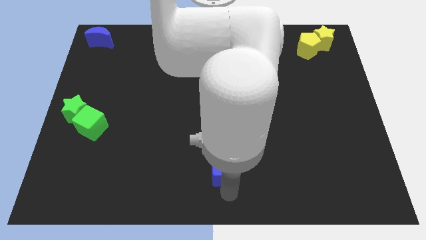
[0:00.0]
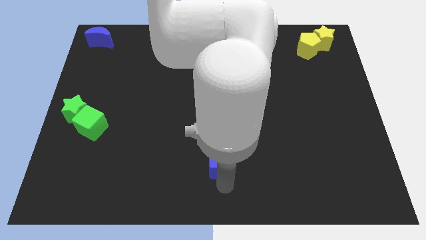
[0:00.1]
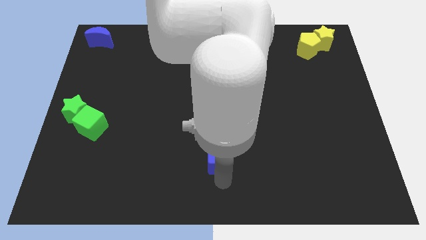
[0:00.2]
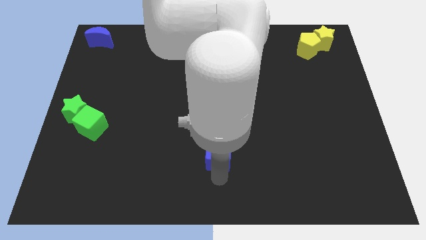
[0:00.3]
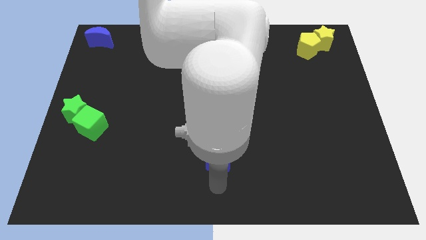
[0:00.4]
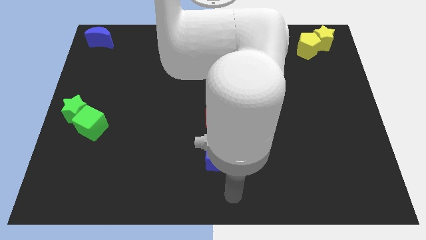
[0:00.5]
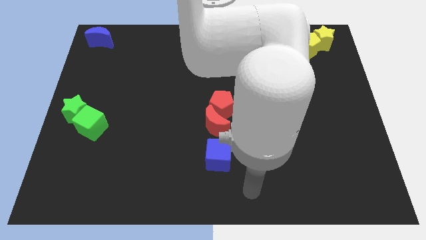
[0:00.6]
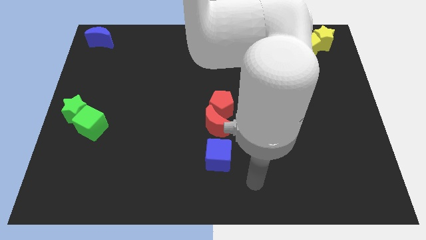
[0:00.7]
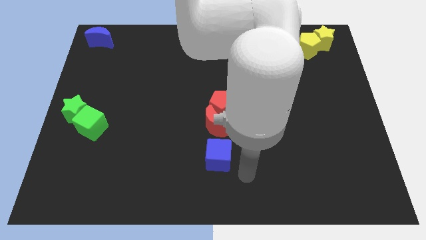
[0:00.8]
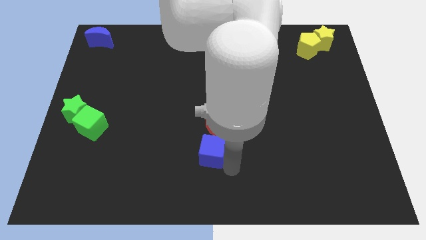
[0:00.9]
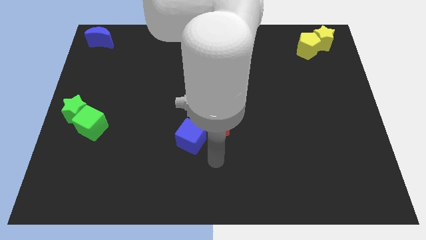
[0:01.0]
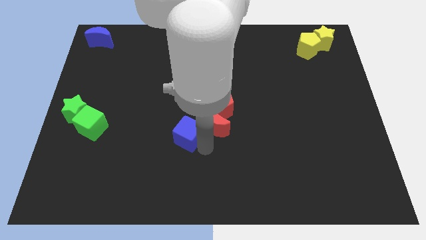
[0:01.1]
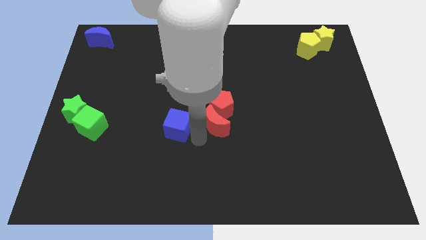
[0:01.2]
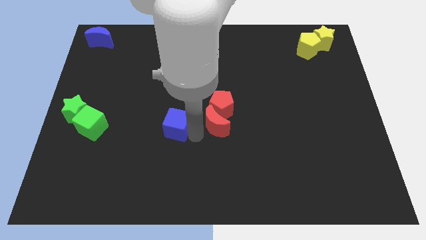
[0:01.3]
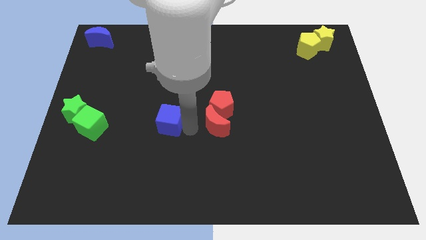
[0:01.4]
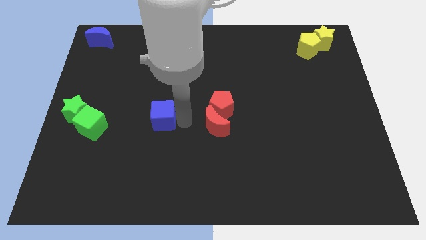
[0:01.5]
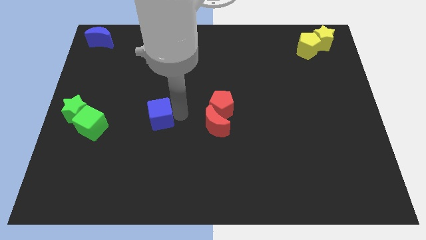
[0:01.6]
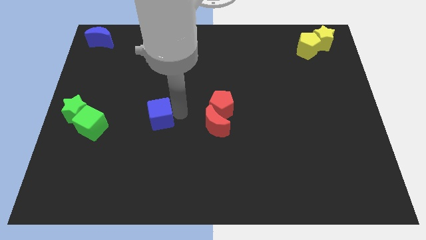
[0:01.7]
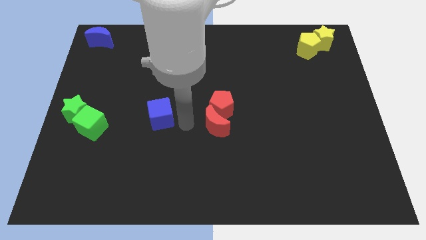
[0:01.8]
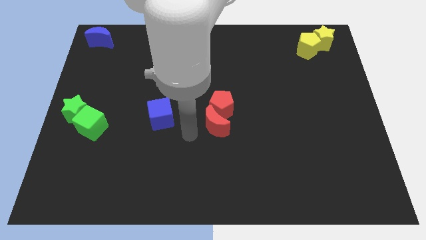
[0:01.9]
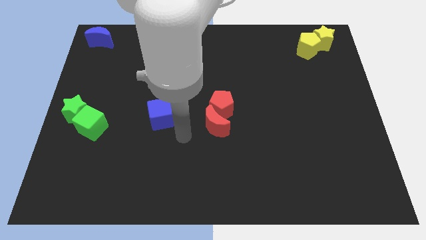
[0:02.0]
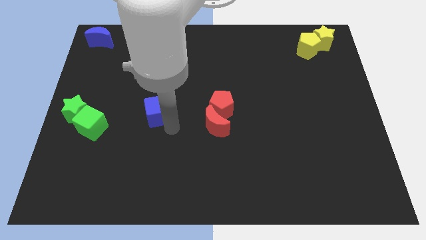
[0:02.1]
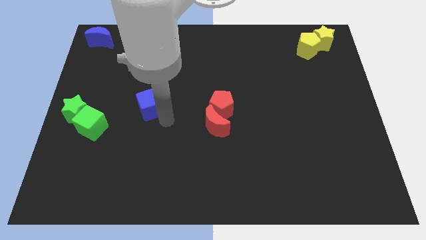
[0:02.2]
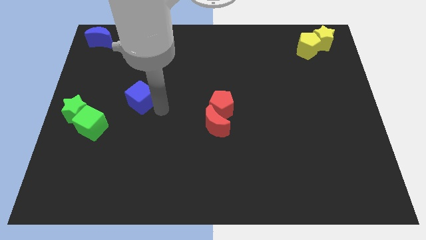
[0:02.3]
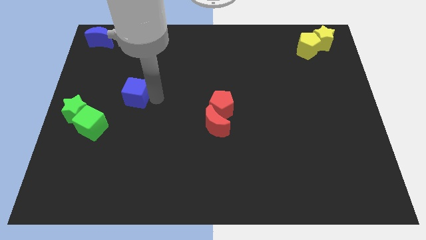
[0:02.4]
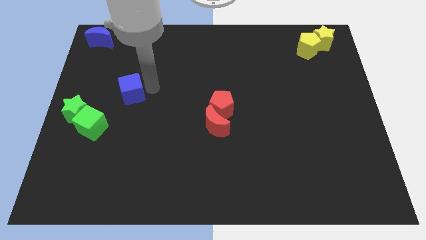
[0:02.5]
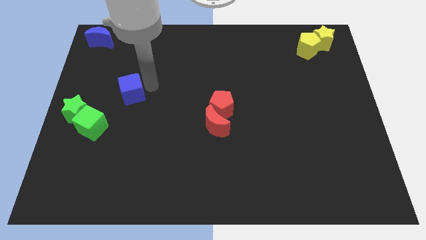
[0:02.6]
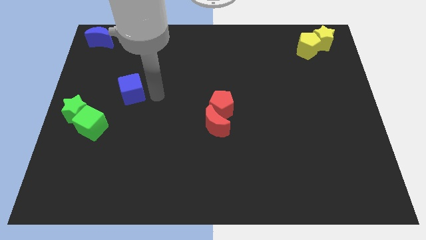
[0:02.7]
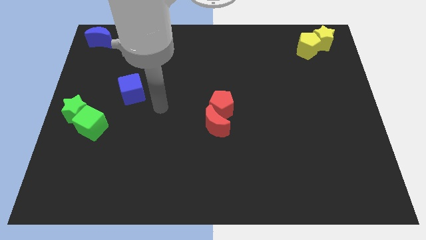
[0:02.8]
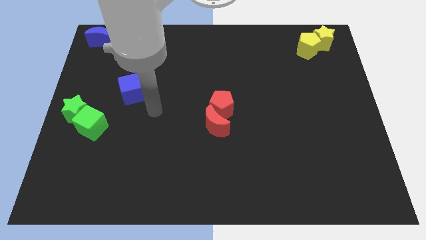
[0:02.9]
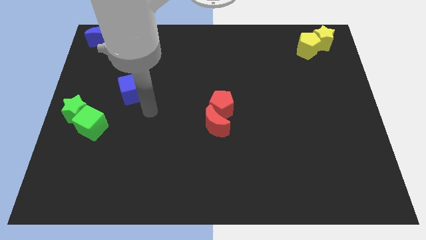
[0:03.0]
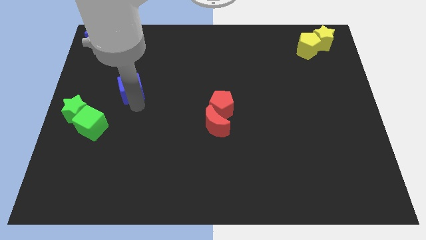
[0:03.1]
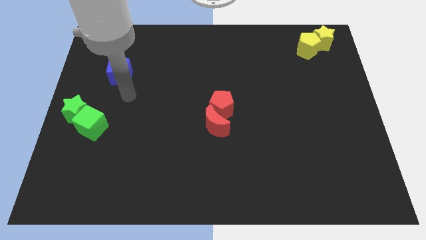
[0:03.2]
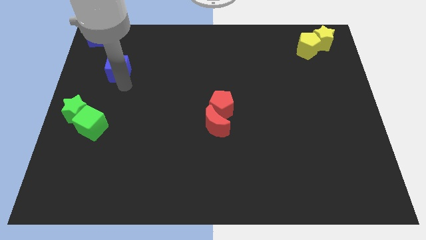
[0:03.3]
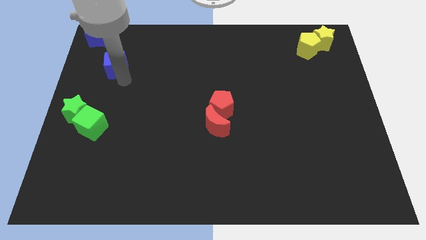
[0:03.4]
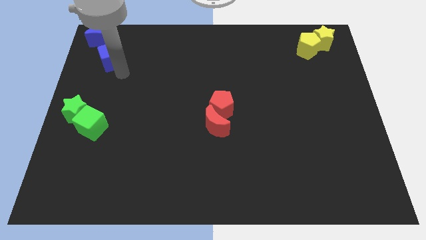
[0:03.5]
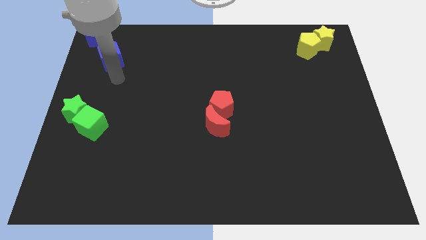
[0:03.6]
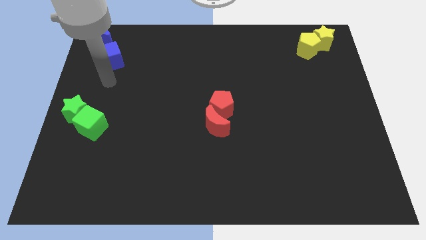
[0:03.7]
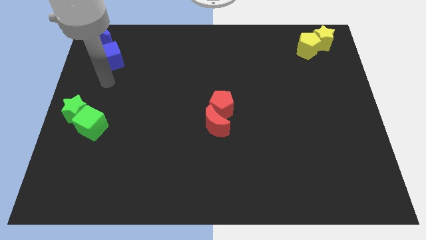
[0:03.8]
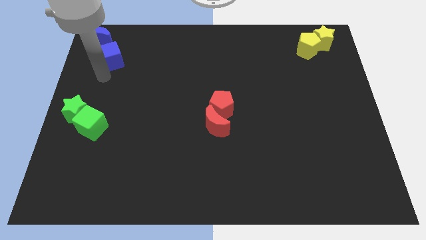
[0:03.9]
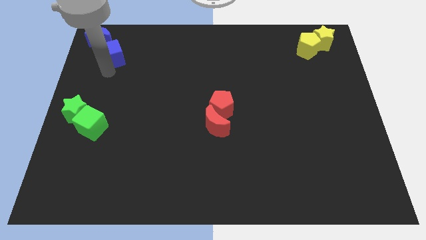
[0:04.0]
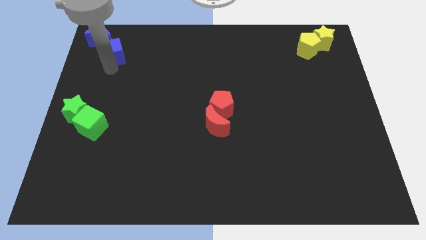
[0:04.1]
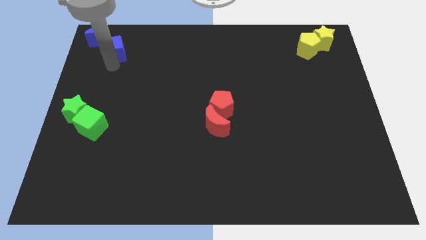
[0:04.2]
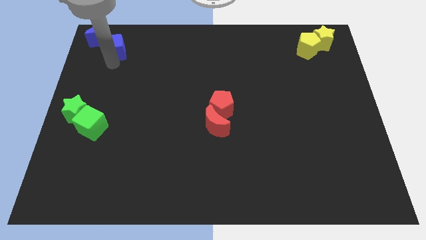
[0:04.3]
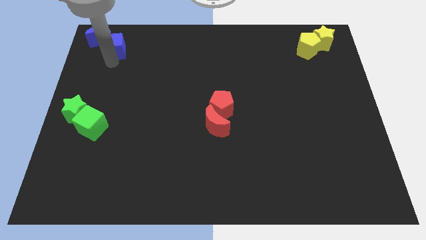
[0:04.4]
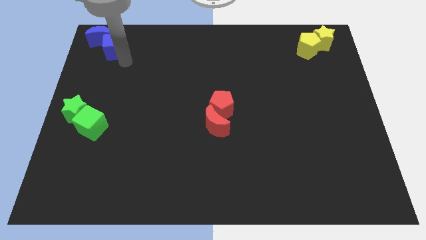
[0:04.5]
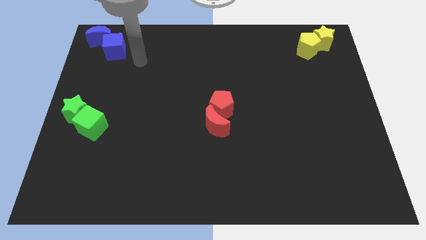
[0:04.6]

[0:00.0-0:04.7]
place blue cube to the top left of the board

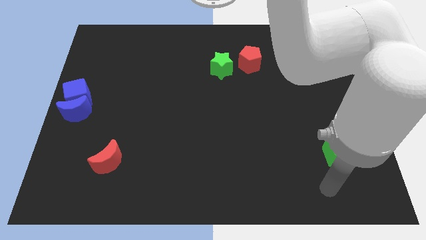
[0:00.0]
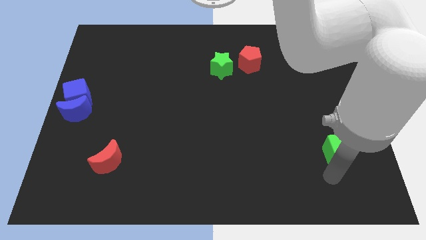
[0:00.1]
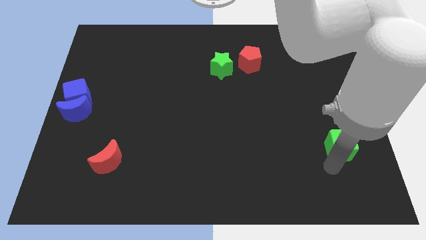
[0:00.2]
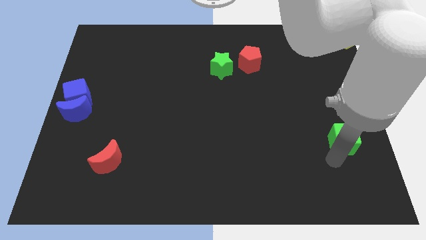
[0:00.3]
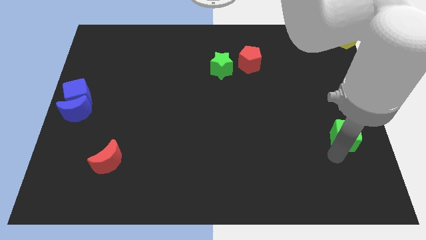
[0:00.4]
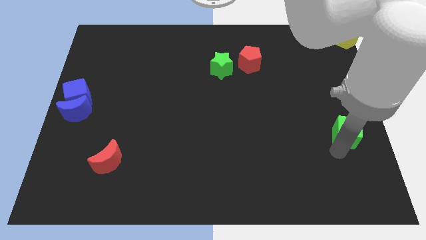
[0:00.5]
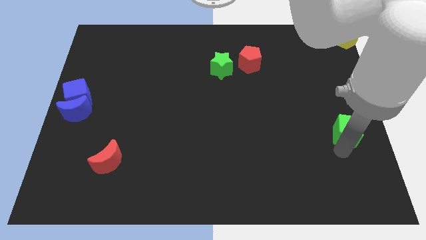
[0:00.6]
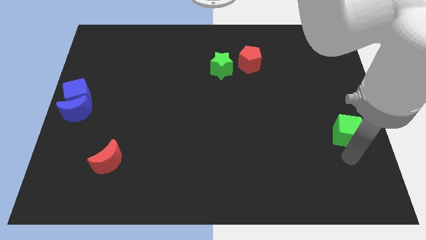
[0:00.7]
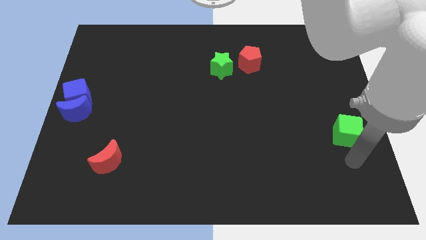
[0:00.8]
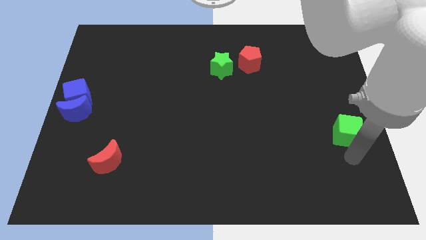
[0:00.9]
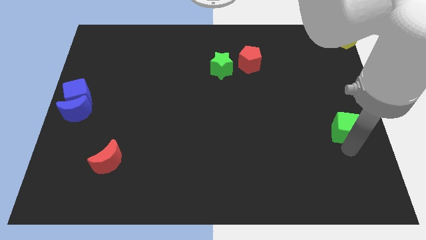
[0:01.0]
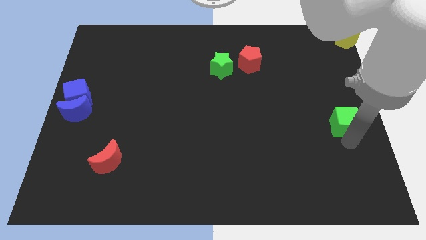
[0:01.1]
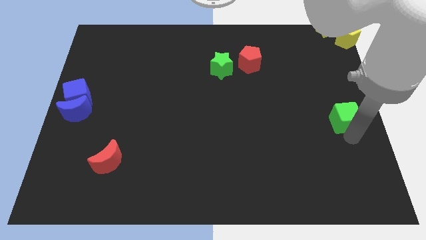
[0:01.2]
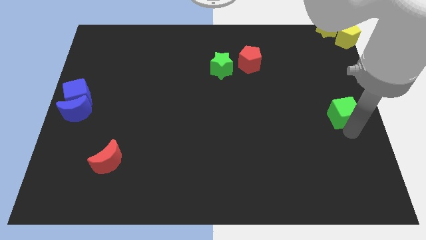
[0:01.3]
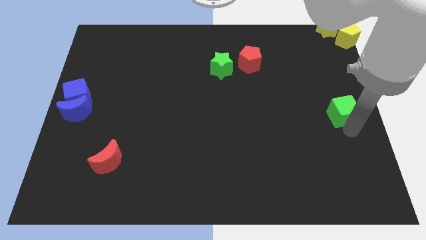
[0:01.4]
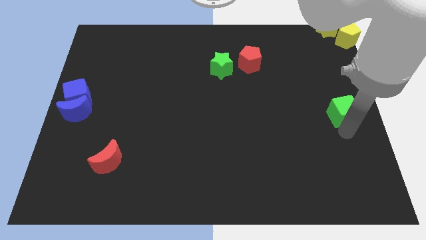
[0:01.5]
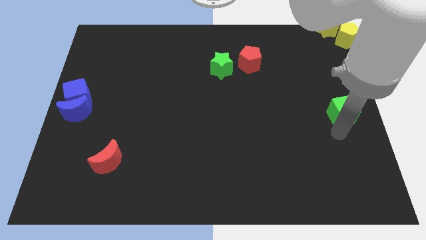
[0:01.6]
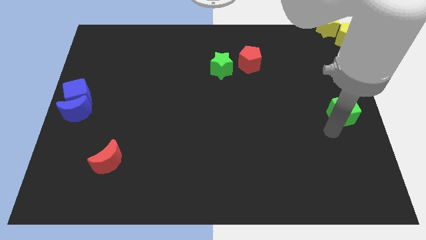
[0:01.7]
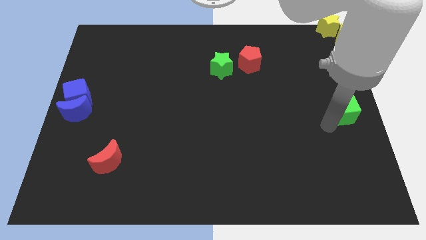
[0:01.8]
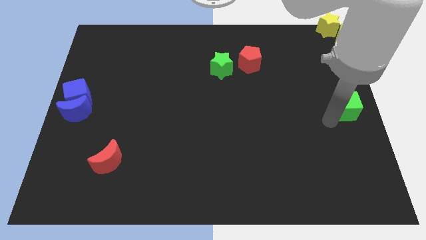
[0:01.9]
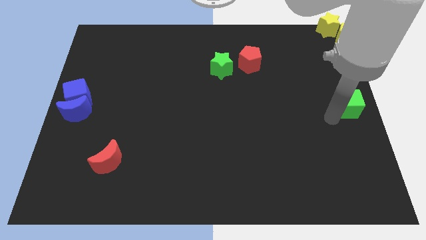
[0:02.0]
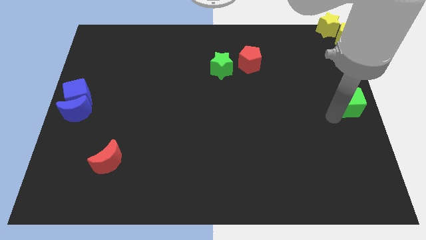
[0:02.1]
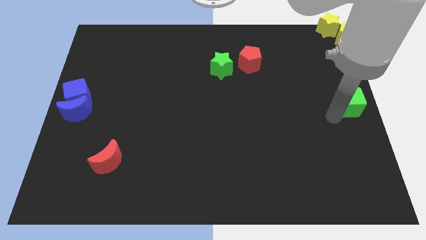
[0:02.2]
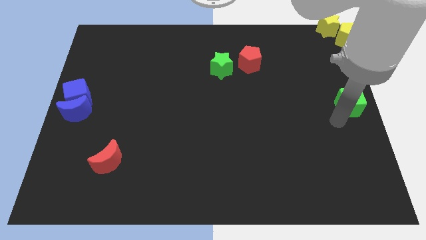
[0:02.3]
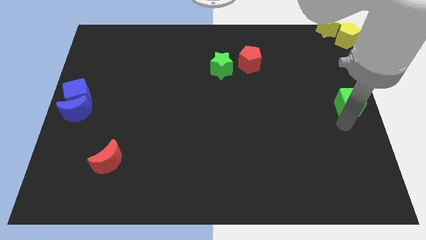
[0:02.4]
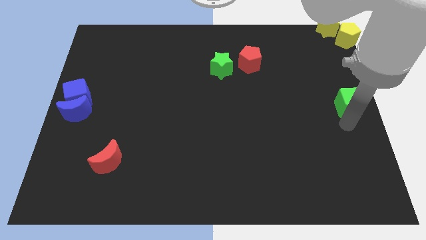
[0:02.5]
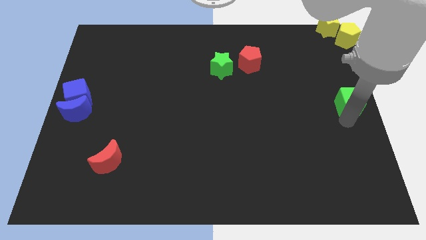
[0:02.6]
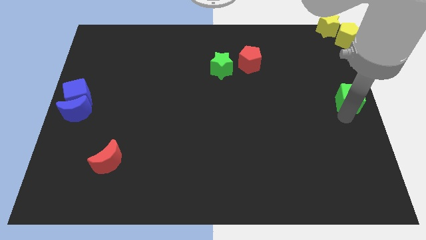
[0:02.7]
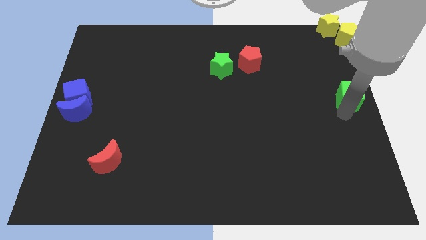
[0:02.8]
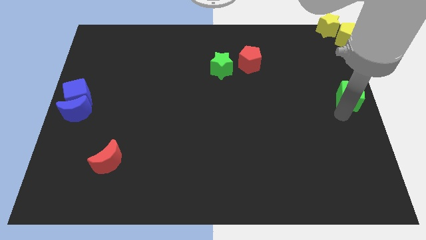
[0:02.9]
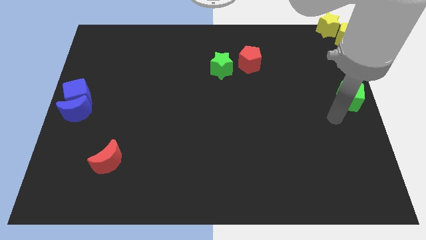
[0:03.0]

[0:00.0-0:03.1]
place the green cube to the right center of the board

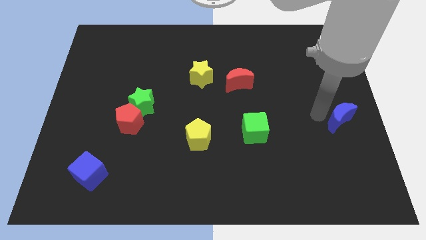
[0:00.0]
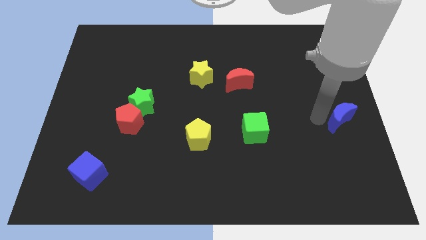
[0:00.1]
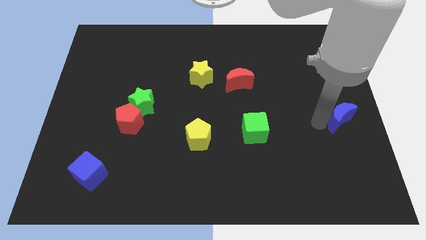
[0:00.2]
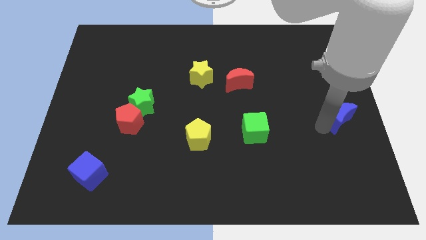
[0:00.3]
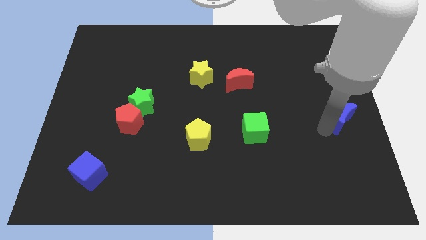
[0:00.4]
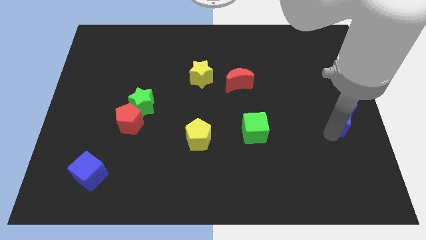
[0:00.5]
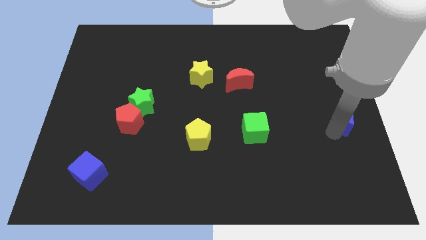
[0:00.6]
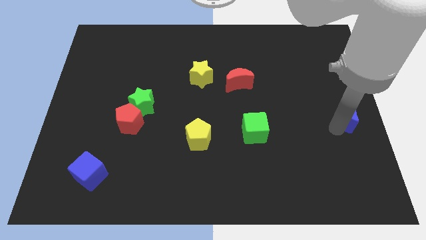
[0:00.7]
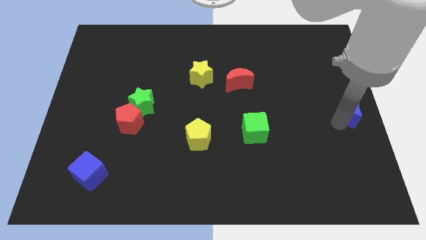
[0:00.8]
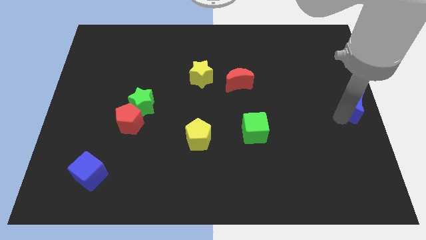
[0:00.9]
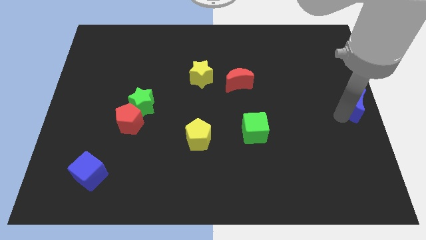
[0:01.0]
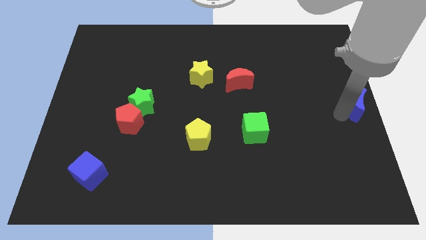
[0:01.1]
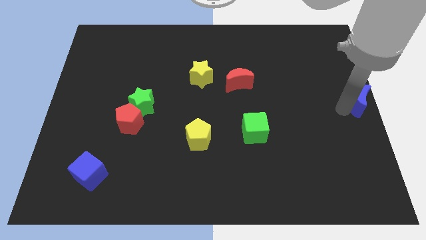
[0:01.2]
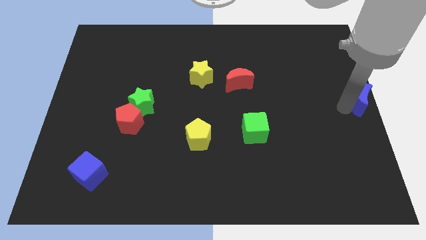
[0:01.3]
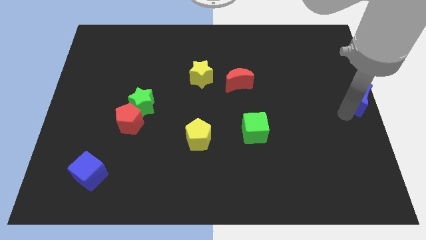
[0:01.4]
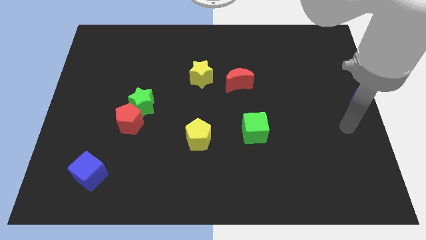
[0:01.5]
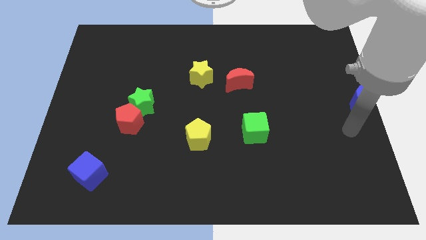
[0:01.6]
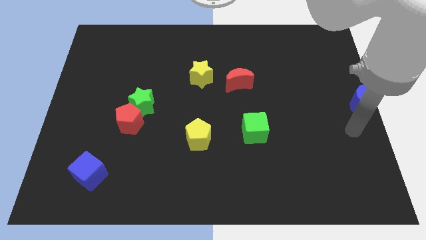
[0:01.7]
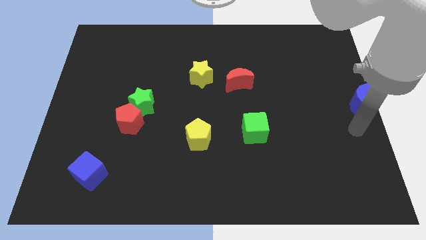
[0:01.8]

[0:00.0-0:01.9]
place the blue crescent horizontally to the right side of the green star
